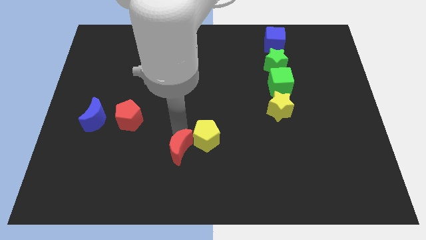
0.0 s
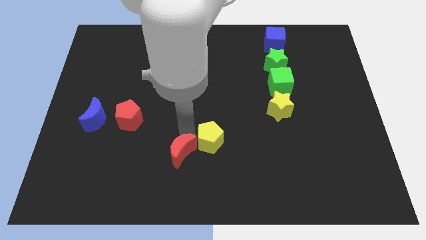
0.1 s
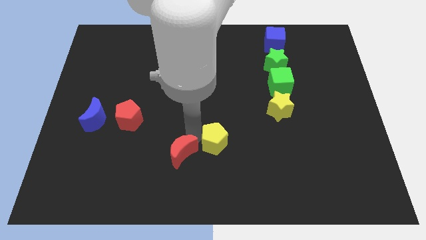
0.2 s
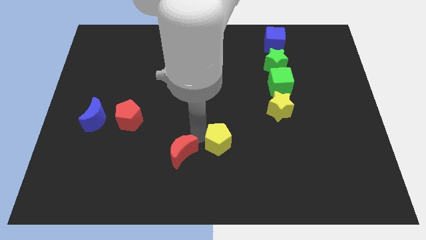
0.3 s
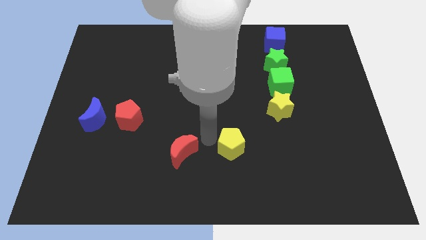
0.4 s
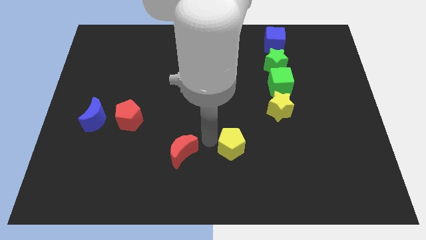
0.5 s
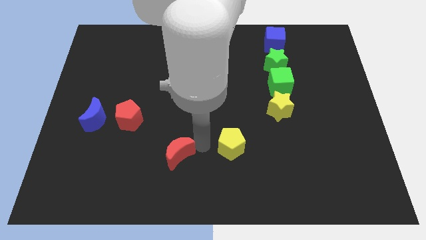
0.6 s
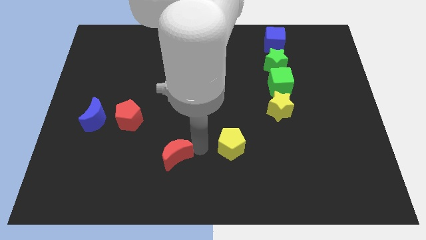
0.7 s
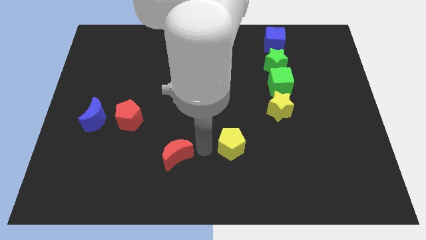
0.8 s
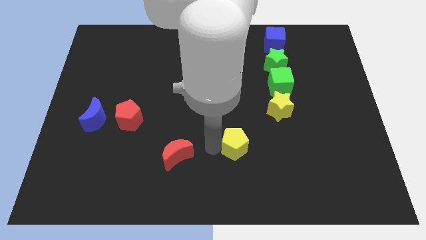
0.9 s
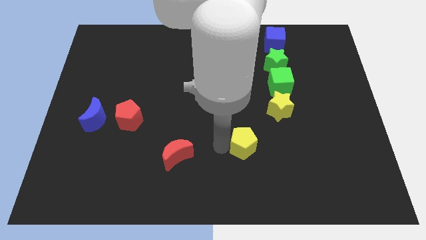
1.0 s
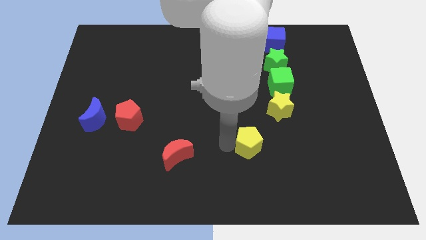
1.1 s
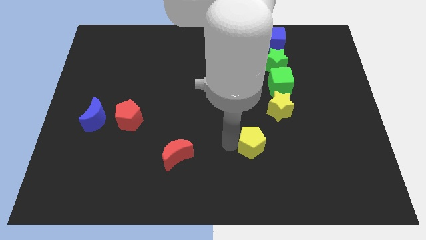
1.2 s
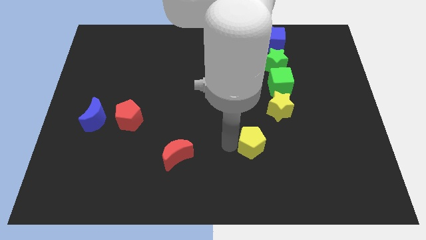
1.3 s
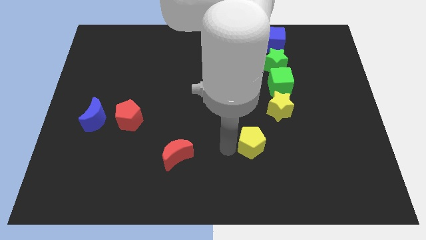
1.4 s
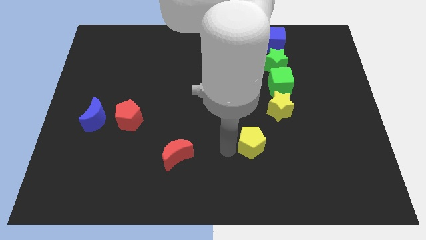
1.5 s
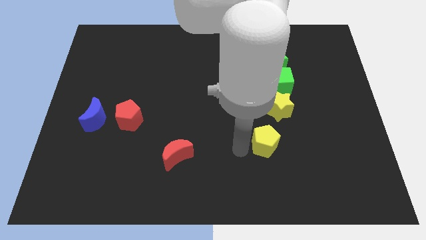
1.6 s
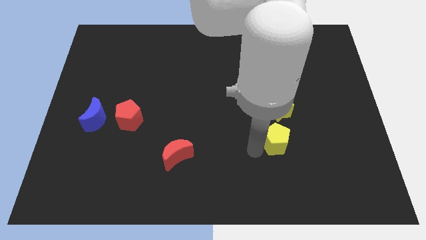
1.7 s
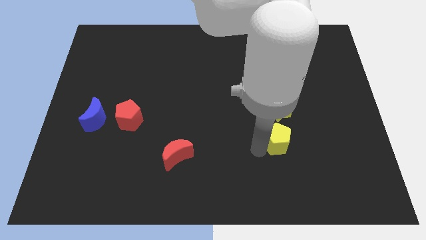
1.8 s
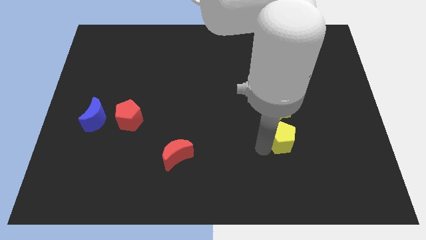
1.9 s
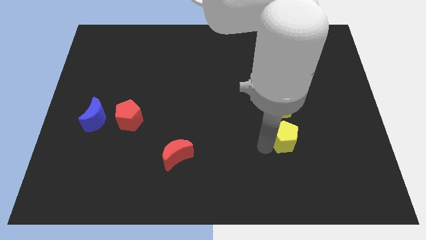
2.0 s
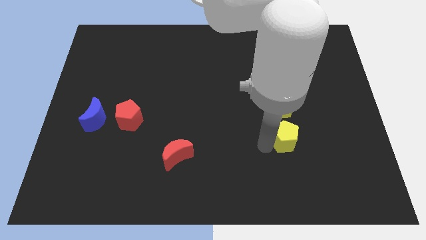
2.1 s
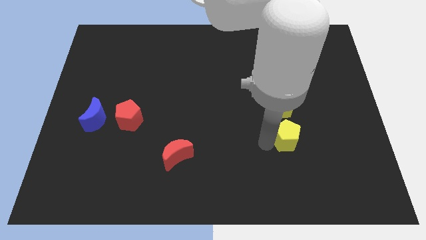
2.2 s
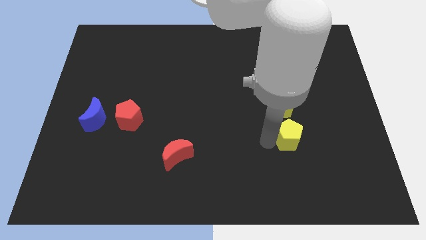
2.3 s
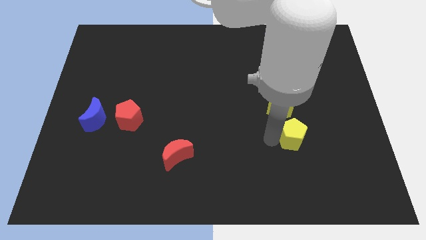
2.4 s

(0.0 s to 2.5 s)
separate yellow pentagon from red moon

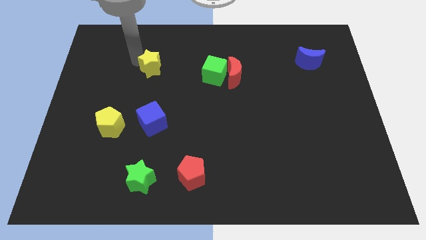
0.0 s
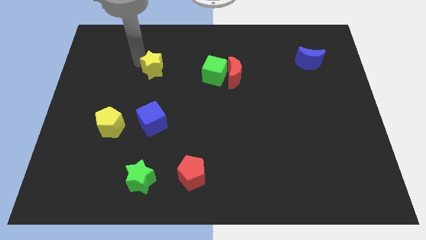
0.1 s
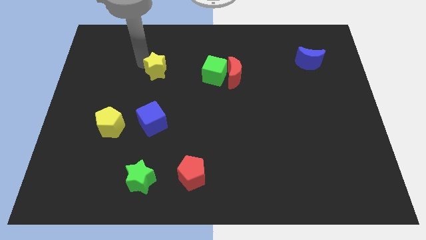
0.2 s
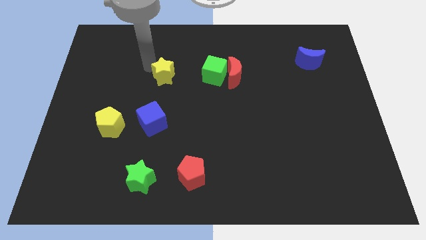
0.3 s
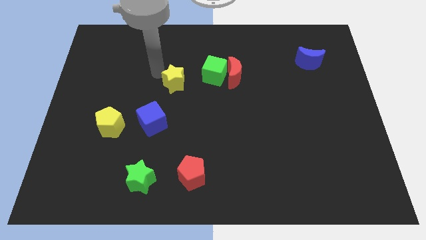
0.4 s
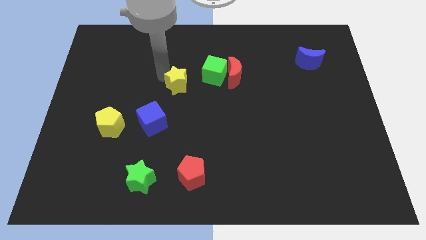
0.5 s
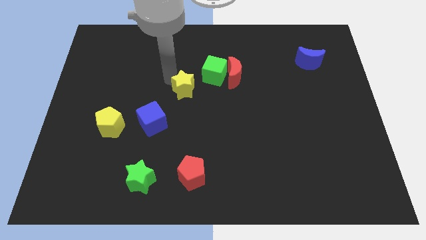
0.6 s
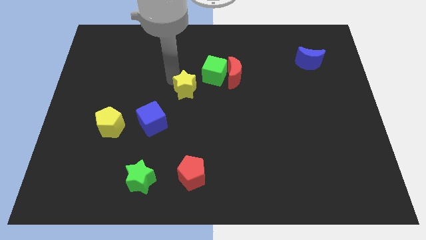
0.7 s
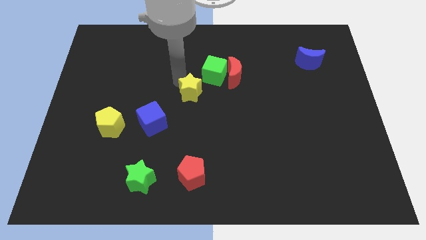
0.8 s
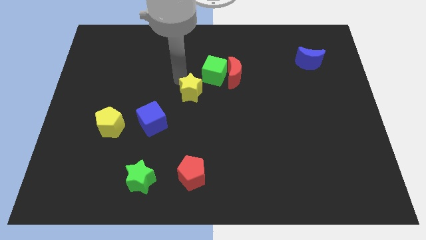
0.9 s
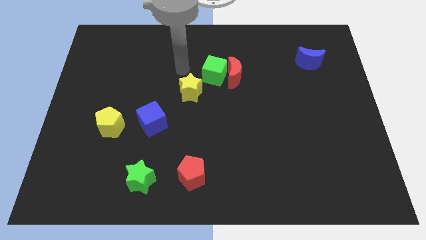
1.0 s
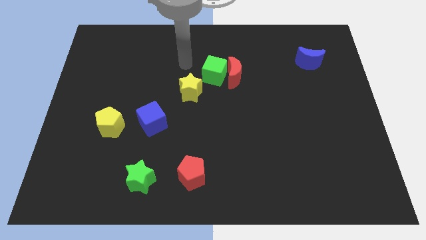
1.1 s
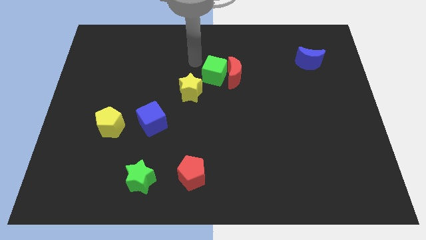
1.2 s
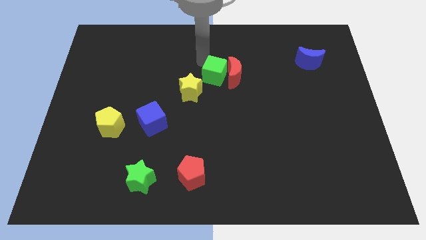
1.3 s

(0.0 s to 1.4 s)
move the yellow star to the bottom left of the green star

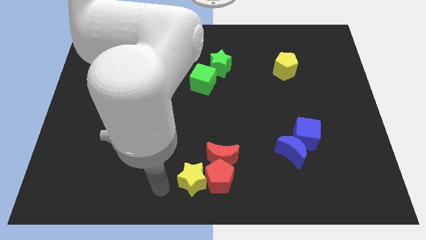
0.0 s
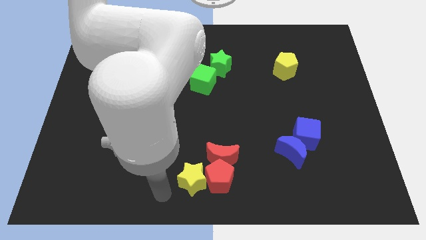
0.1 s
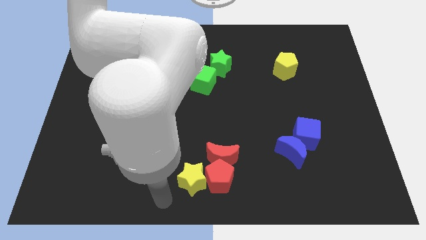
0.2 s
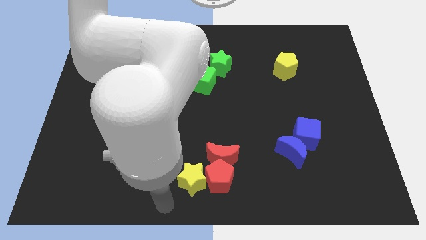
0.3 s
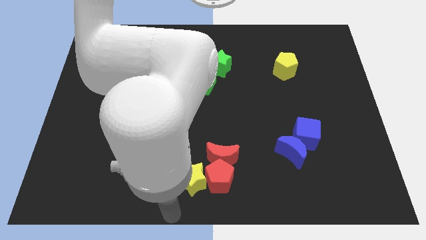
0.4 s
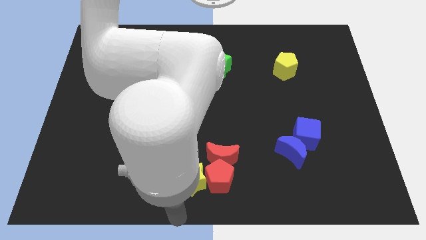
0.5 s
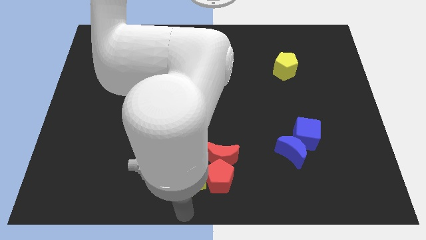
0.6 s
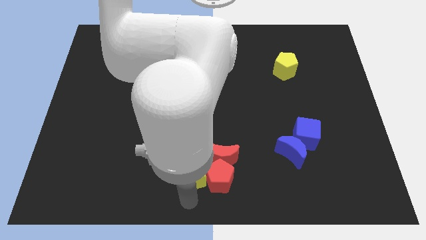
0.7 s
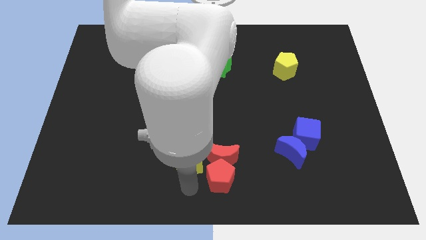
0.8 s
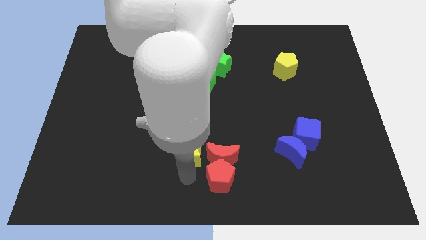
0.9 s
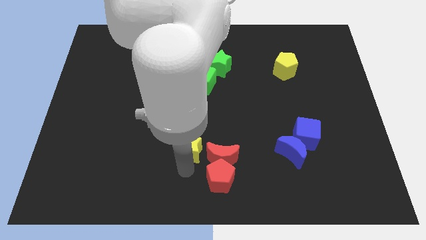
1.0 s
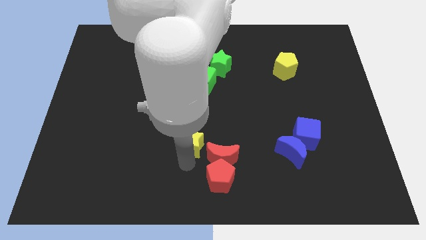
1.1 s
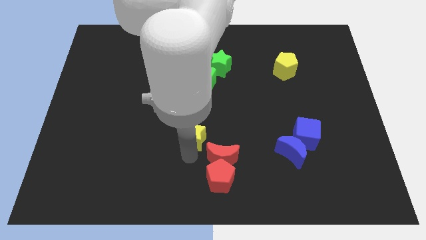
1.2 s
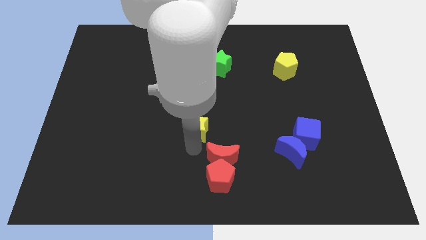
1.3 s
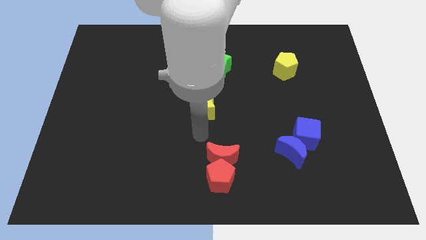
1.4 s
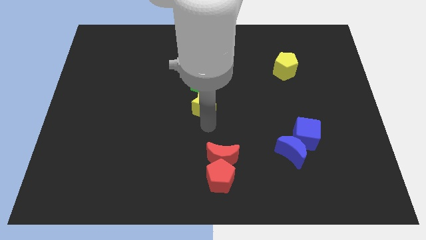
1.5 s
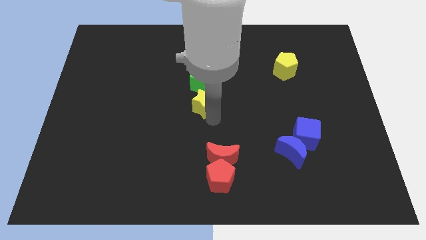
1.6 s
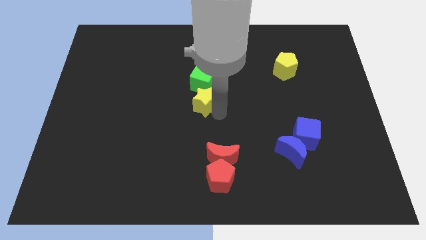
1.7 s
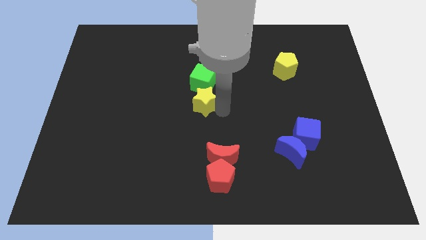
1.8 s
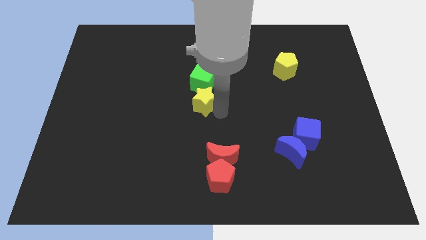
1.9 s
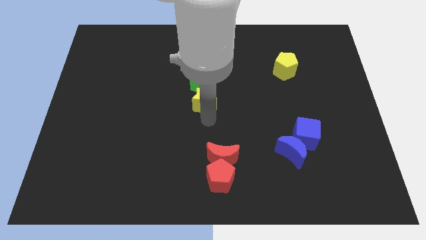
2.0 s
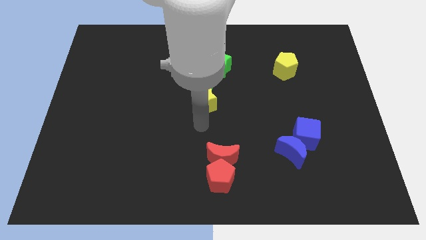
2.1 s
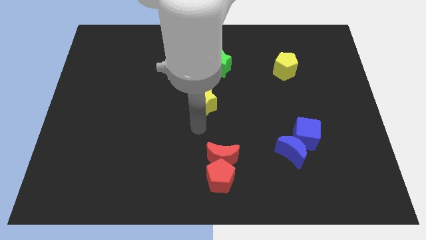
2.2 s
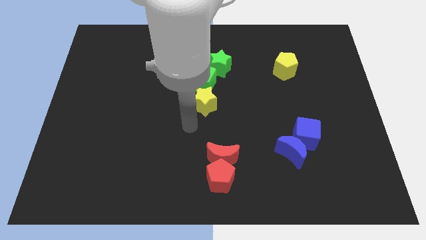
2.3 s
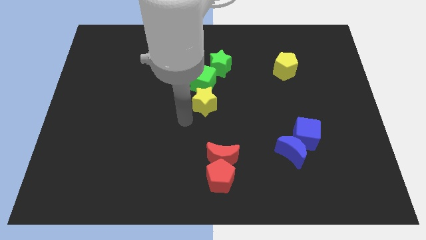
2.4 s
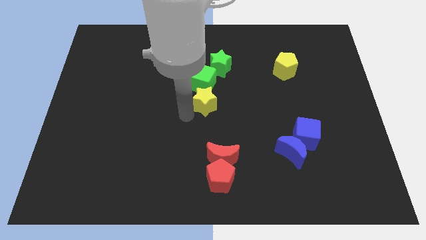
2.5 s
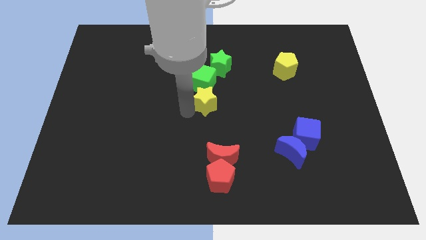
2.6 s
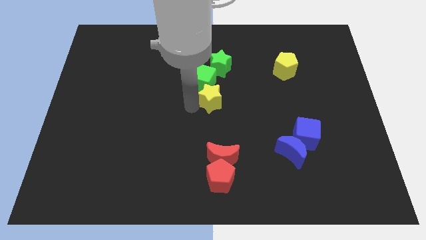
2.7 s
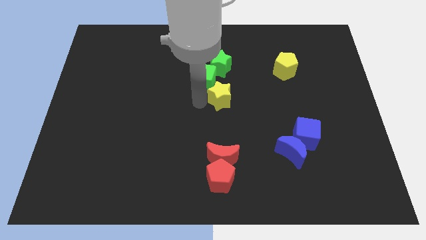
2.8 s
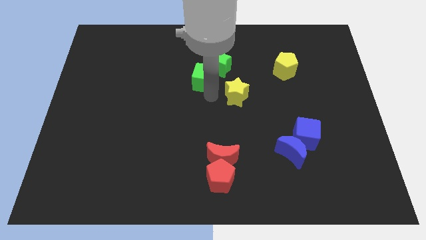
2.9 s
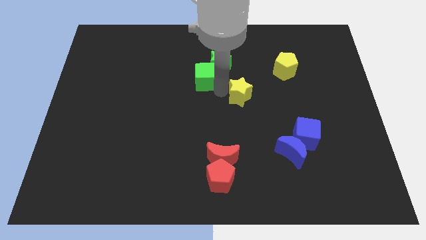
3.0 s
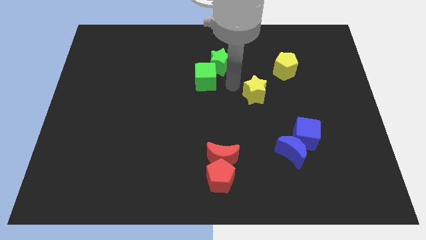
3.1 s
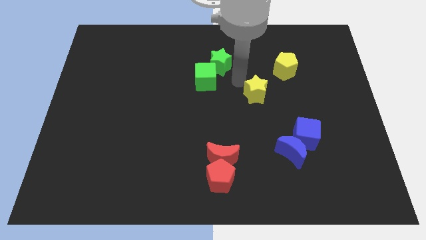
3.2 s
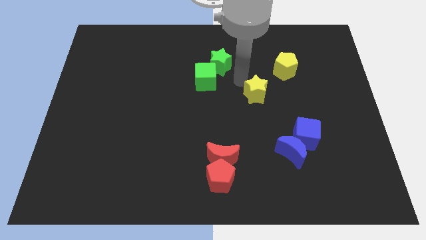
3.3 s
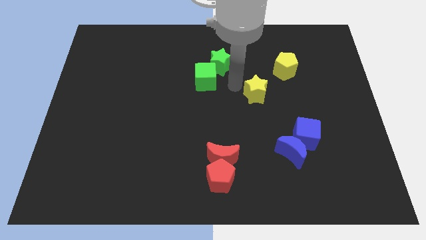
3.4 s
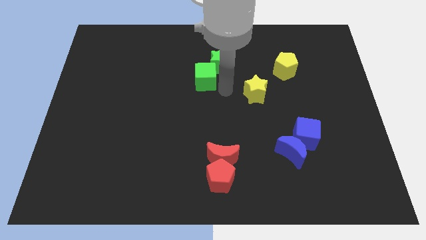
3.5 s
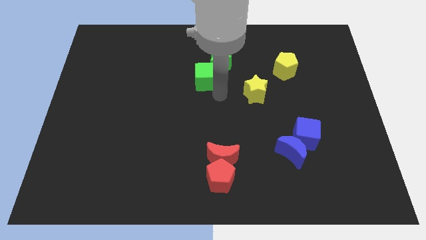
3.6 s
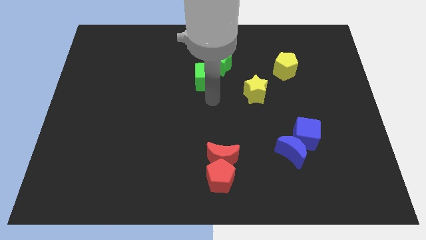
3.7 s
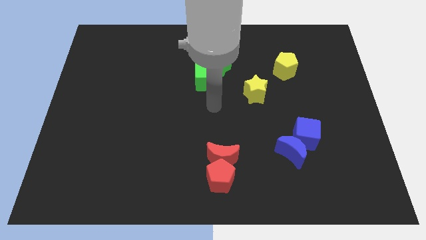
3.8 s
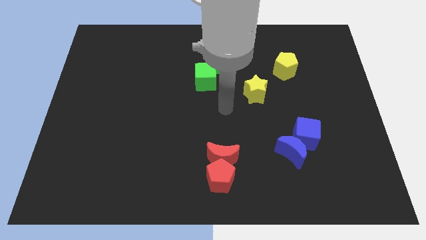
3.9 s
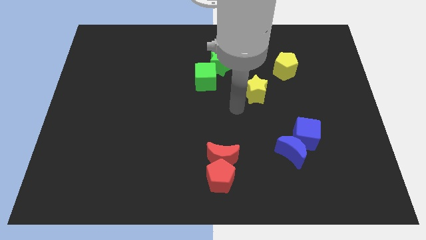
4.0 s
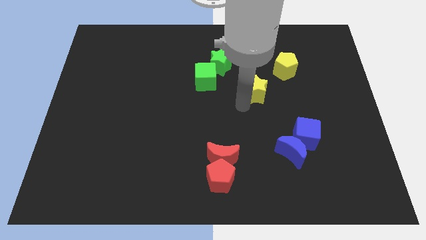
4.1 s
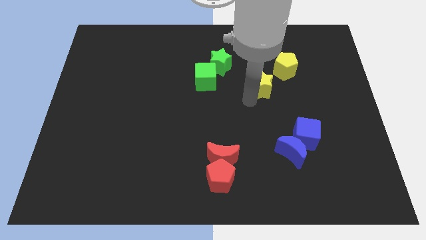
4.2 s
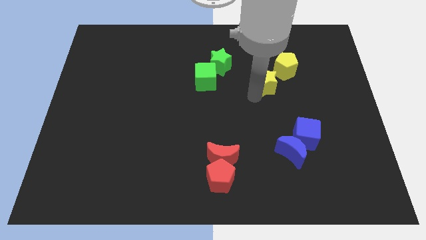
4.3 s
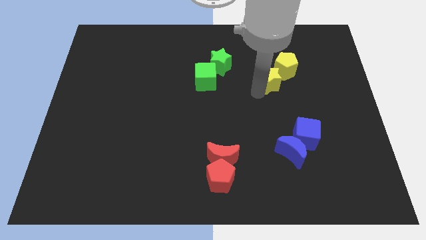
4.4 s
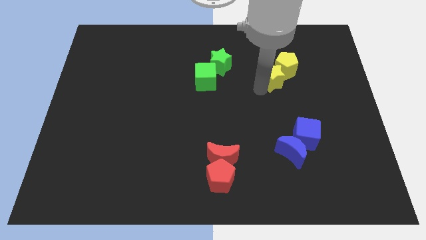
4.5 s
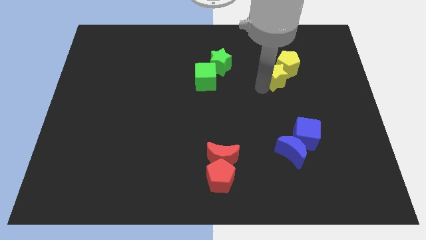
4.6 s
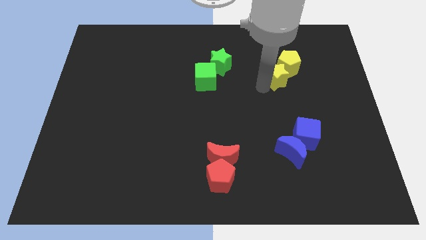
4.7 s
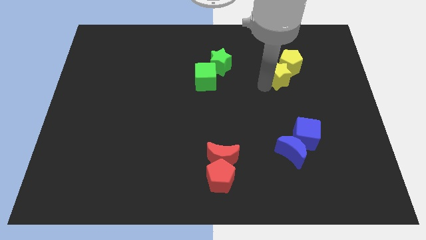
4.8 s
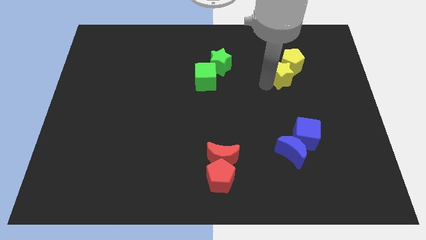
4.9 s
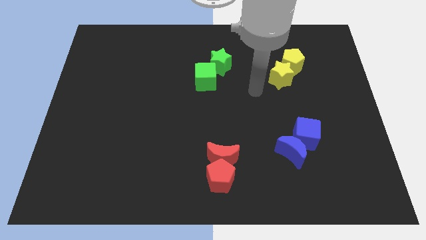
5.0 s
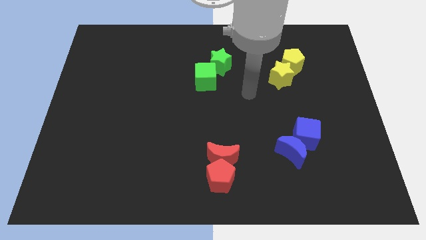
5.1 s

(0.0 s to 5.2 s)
drag the yellow star into the yellow pentagon
